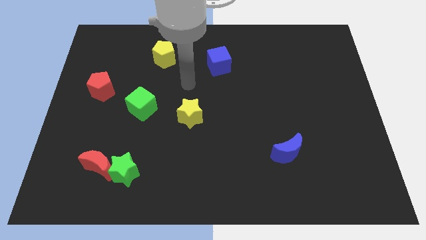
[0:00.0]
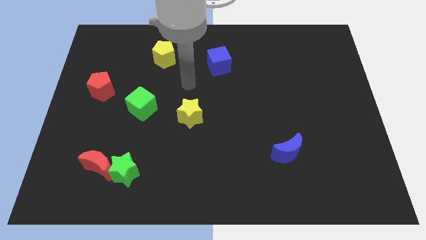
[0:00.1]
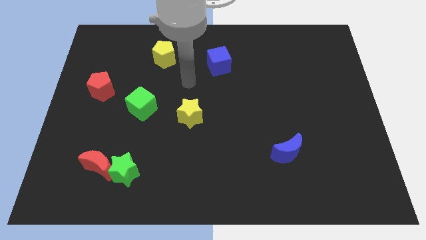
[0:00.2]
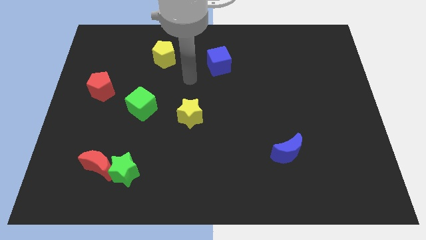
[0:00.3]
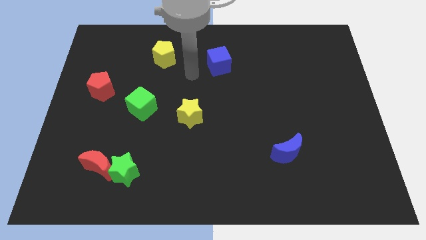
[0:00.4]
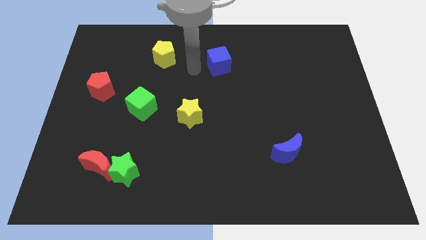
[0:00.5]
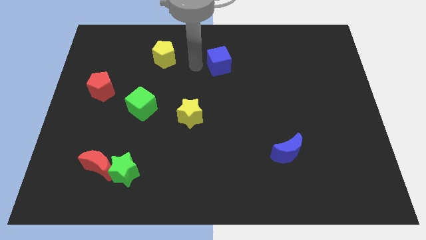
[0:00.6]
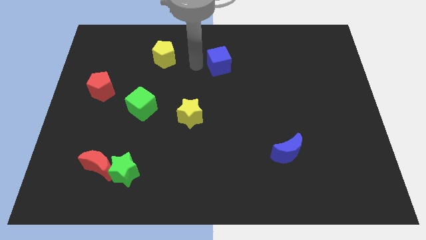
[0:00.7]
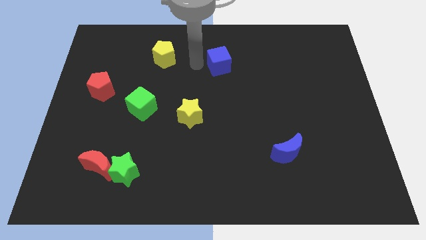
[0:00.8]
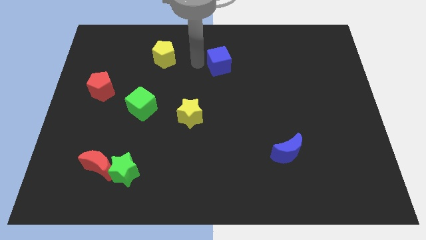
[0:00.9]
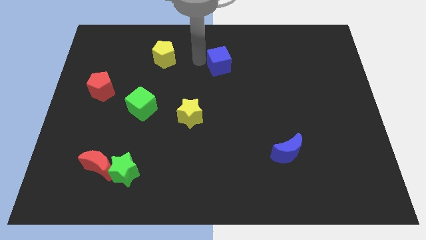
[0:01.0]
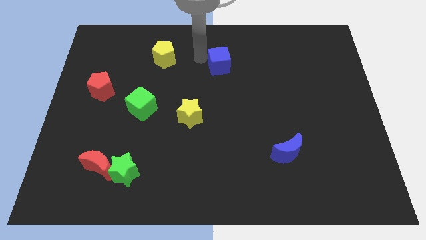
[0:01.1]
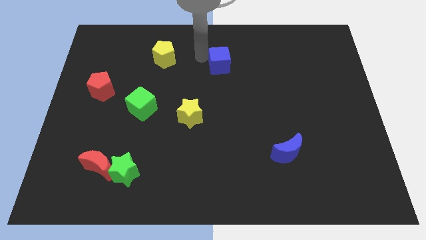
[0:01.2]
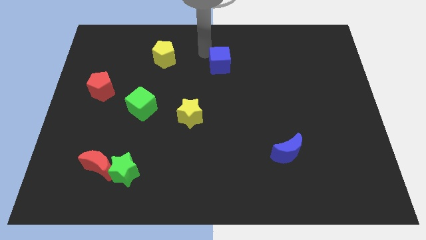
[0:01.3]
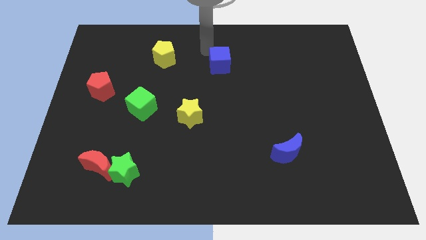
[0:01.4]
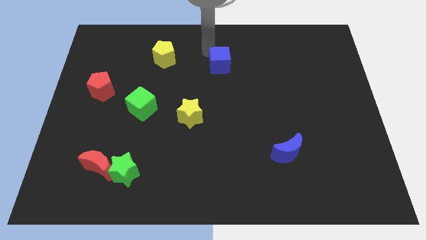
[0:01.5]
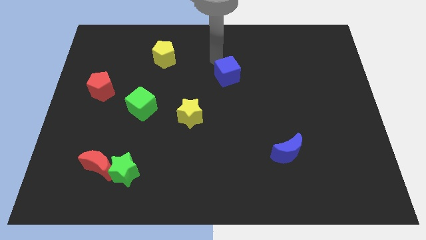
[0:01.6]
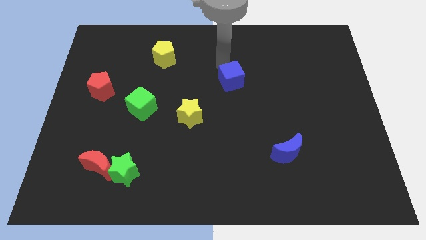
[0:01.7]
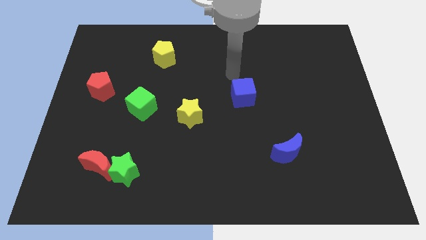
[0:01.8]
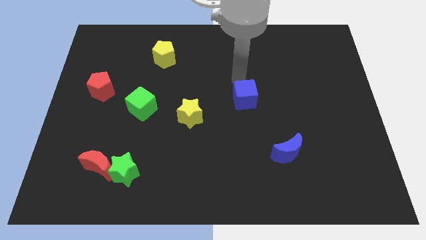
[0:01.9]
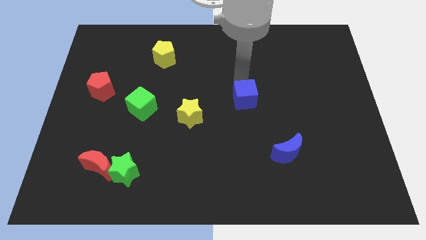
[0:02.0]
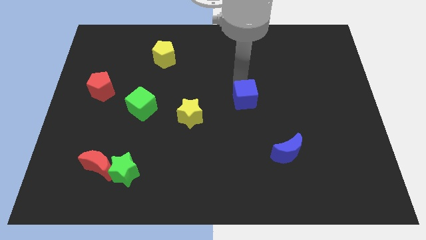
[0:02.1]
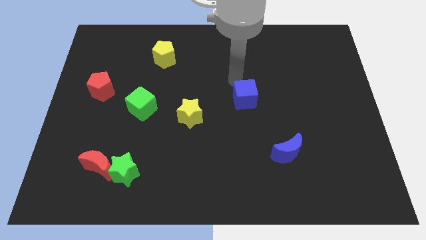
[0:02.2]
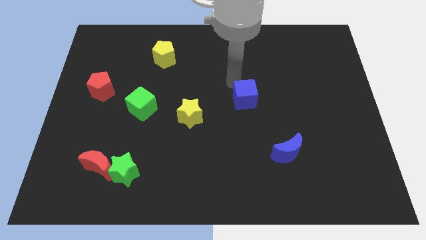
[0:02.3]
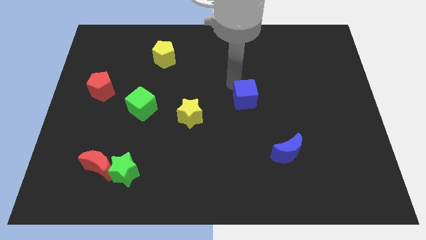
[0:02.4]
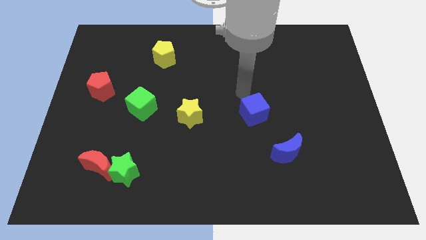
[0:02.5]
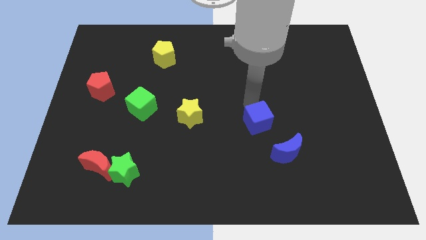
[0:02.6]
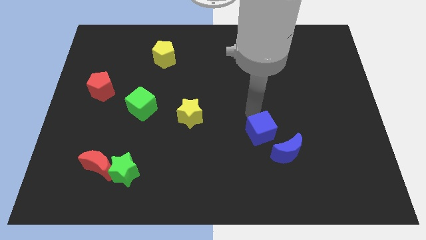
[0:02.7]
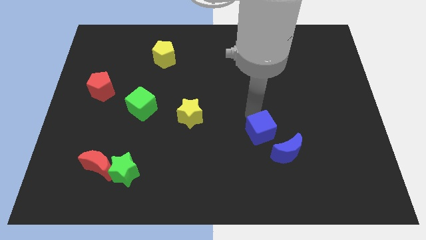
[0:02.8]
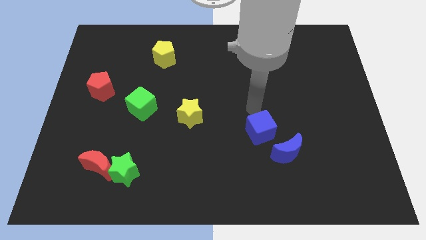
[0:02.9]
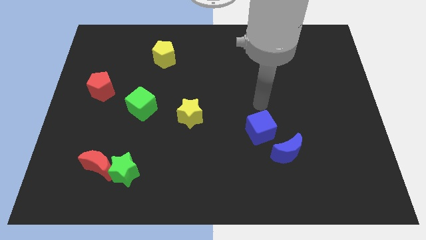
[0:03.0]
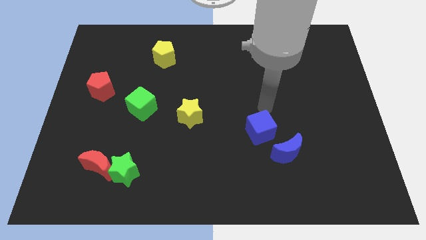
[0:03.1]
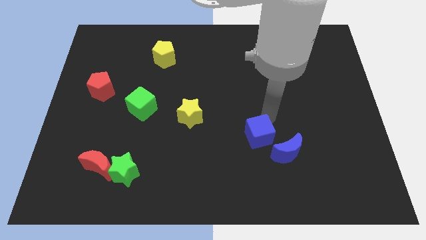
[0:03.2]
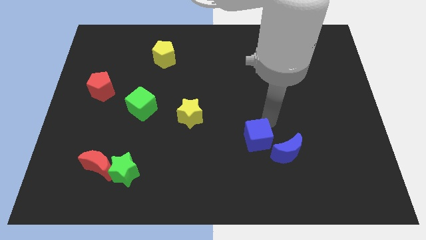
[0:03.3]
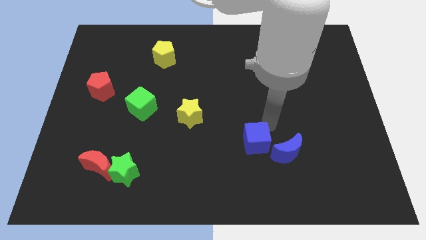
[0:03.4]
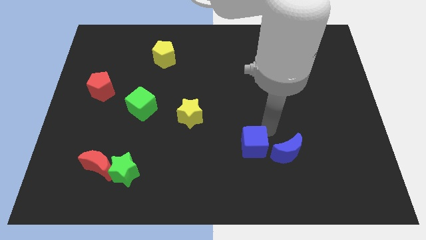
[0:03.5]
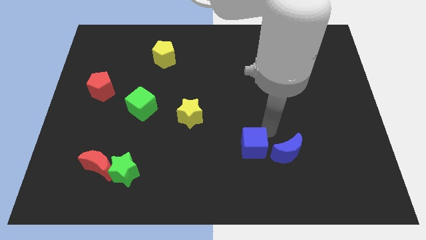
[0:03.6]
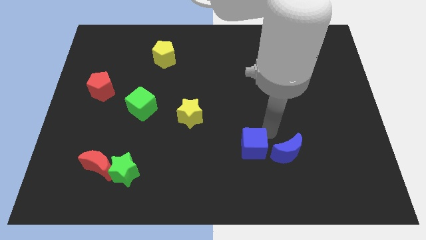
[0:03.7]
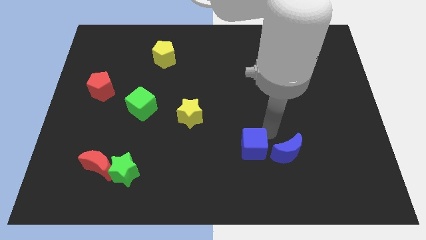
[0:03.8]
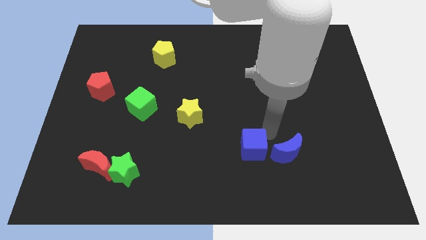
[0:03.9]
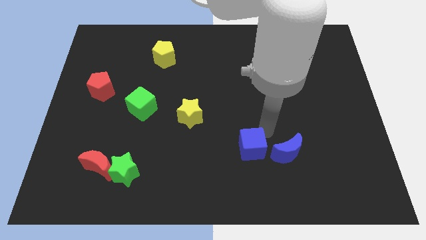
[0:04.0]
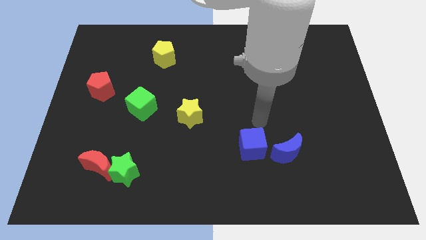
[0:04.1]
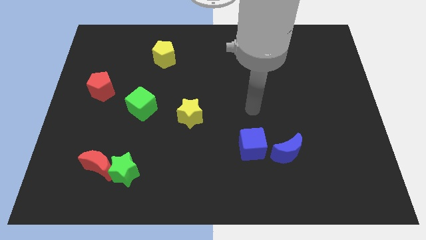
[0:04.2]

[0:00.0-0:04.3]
move the blue cube to the left side of the blue crescent

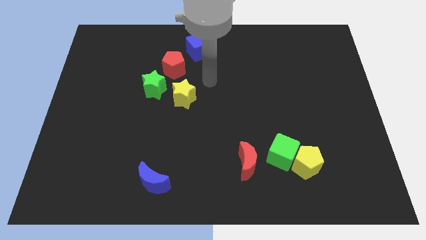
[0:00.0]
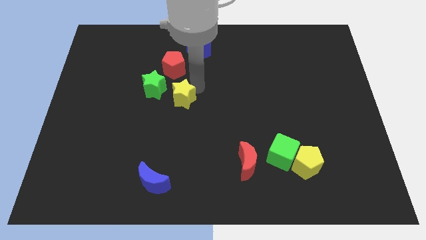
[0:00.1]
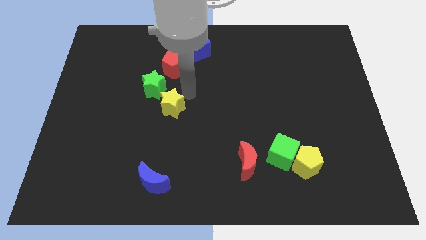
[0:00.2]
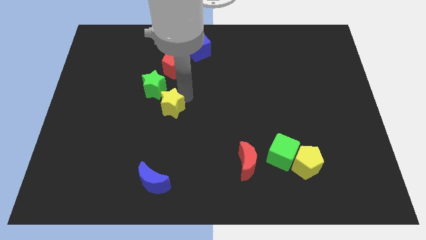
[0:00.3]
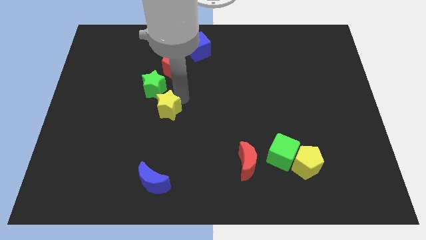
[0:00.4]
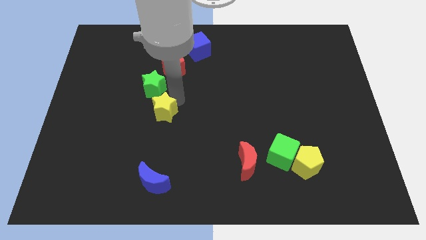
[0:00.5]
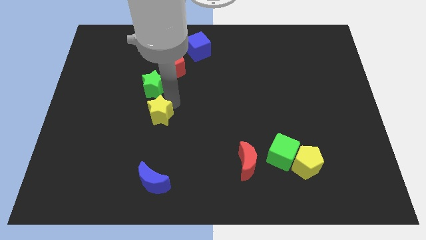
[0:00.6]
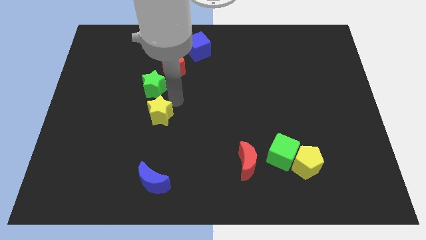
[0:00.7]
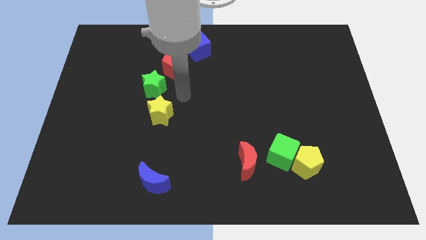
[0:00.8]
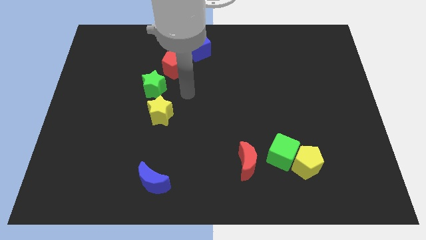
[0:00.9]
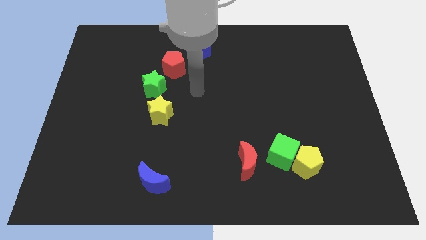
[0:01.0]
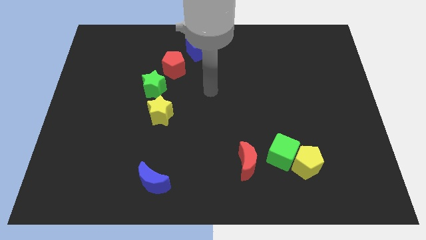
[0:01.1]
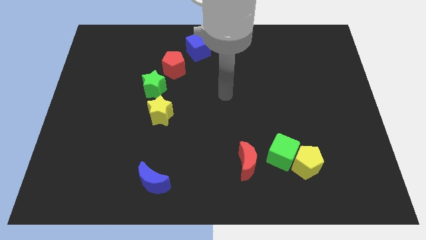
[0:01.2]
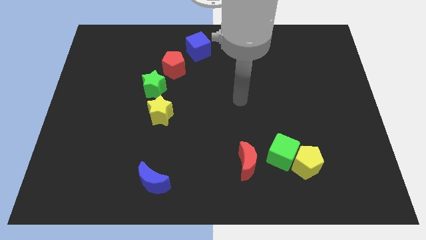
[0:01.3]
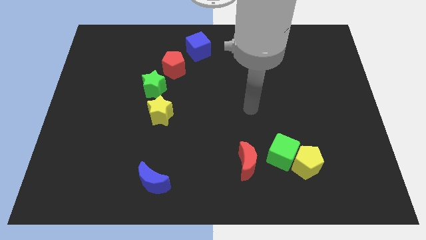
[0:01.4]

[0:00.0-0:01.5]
move the yellow star above the blue crescent

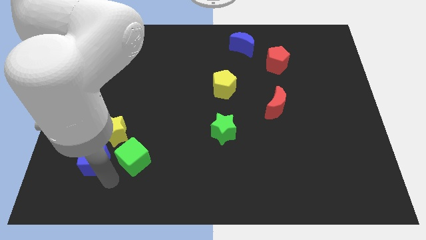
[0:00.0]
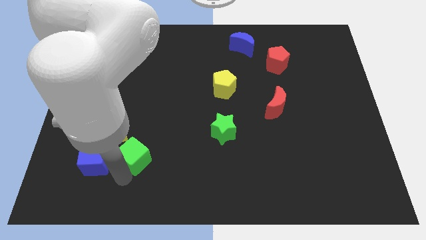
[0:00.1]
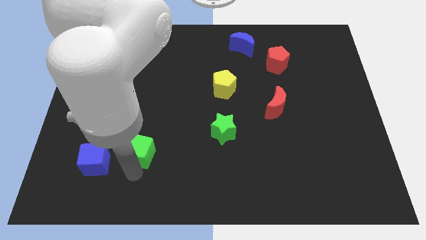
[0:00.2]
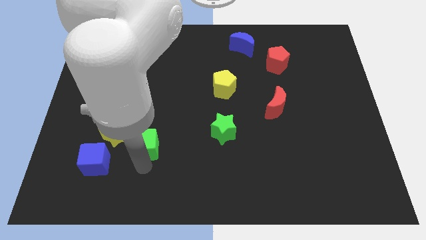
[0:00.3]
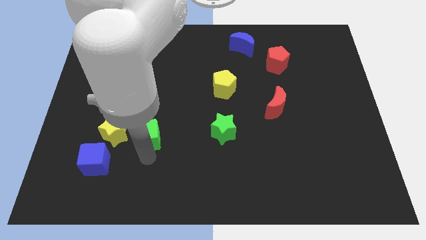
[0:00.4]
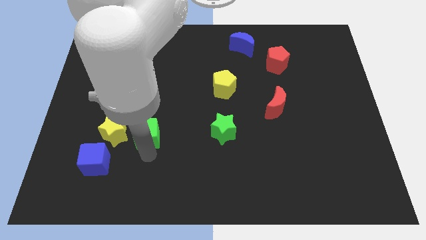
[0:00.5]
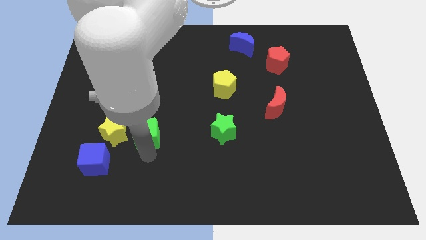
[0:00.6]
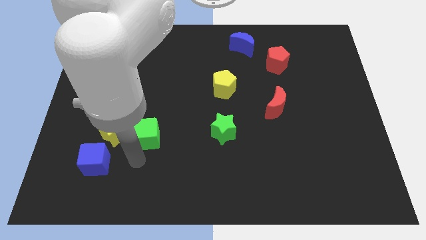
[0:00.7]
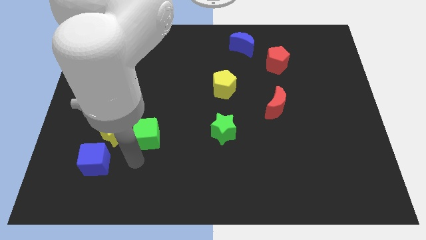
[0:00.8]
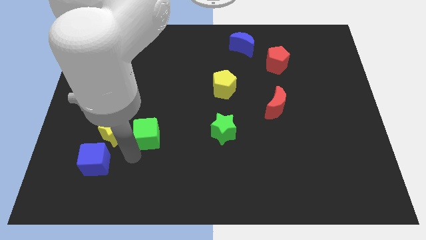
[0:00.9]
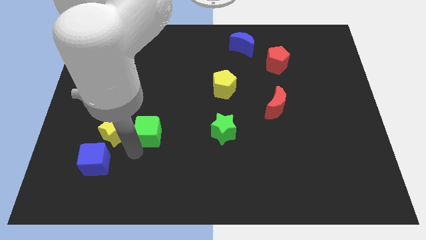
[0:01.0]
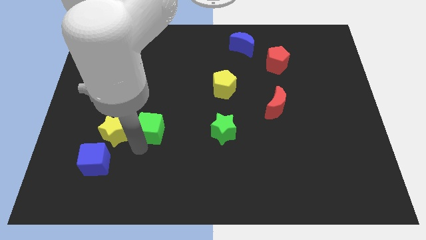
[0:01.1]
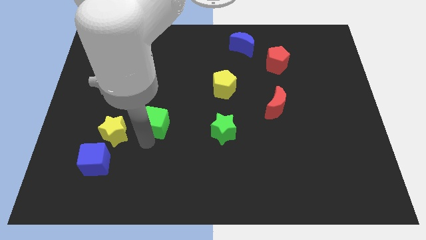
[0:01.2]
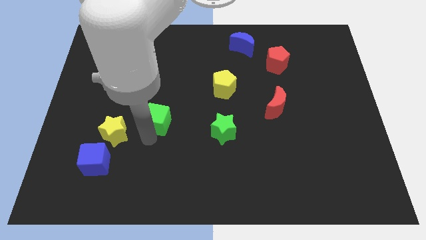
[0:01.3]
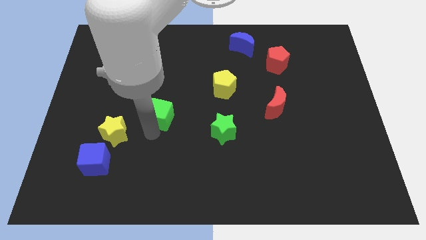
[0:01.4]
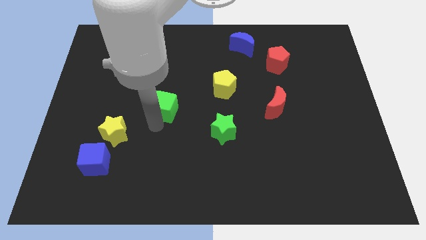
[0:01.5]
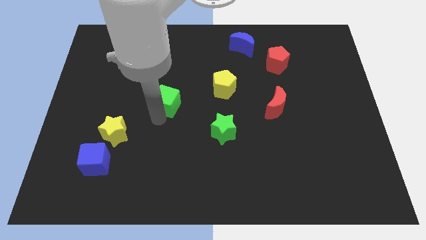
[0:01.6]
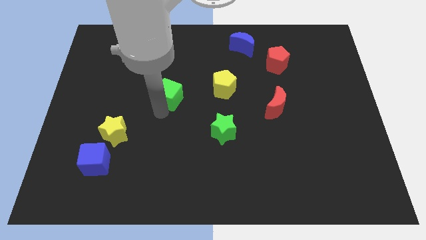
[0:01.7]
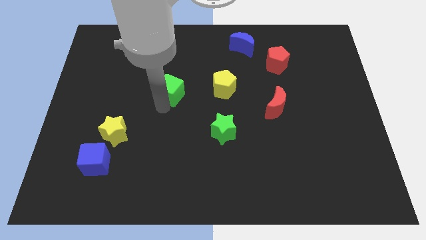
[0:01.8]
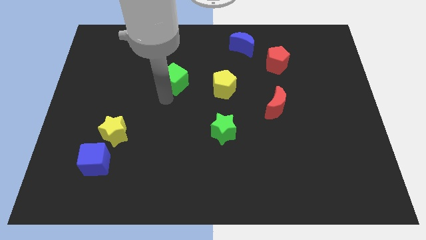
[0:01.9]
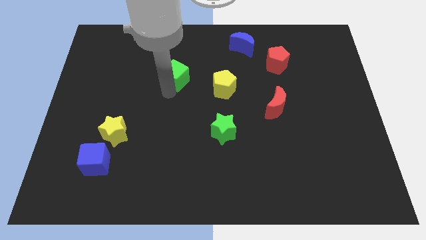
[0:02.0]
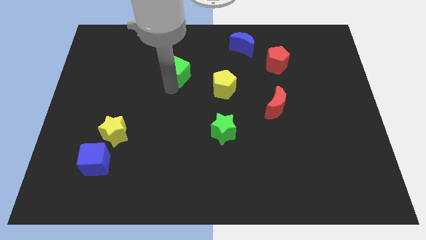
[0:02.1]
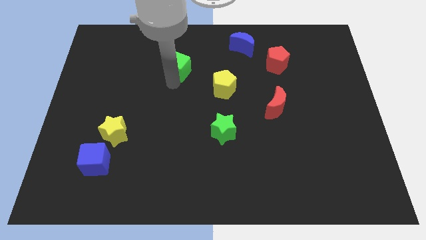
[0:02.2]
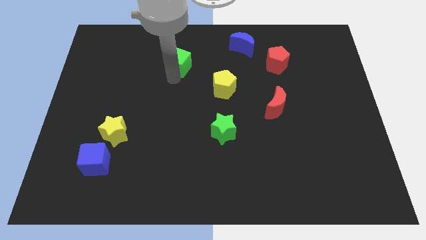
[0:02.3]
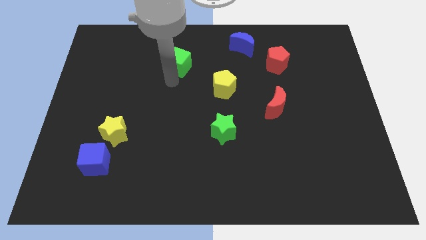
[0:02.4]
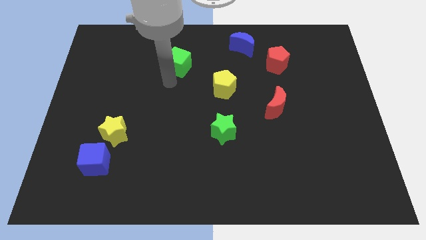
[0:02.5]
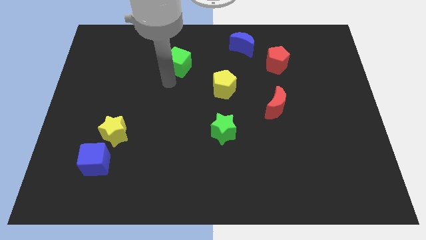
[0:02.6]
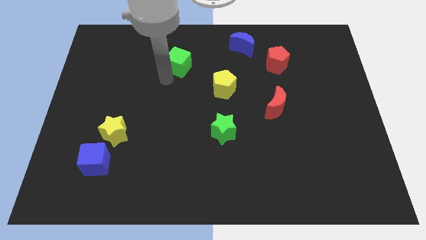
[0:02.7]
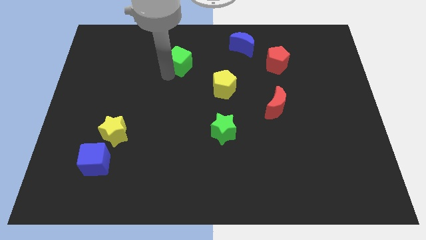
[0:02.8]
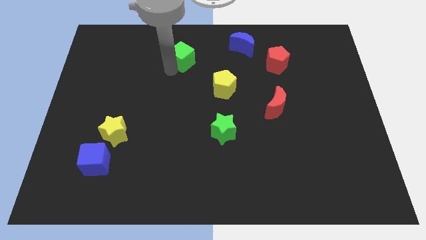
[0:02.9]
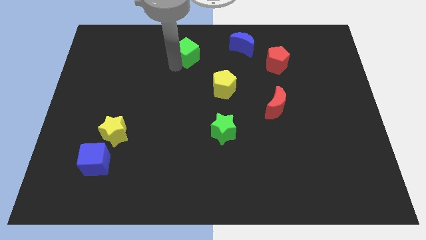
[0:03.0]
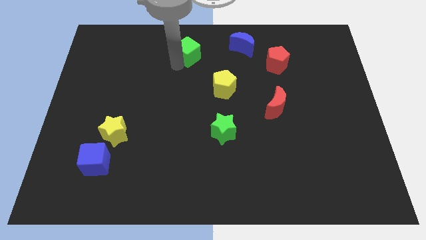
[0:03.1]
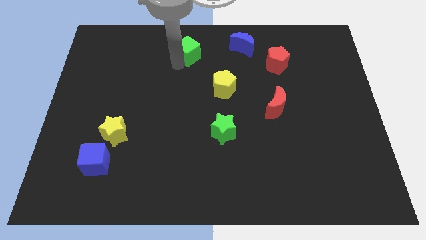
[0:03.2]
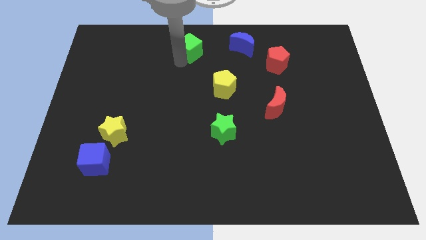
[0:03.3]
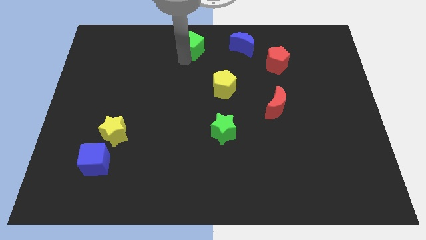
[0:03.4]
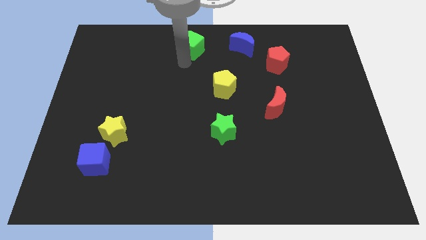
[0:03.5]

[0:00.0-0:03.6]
move the green cube left to the blue crescent
